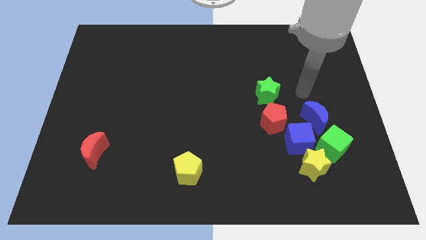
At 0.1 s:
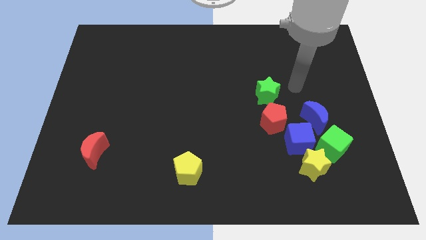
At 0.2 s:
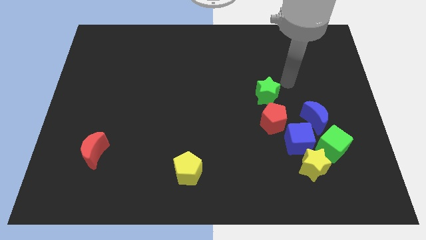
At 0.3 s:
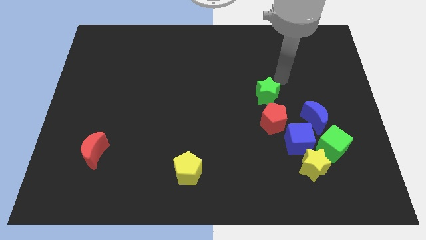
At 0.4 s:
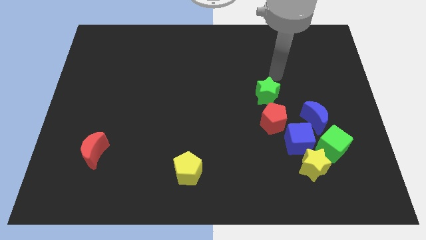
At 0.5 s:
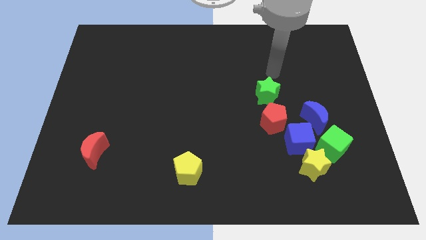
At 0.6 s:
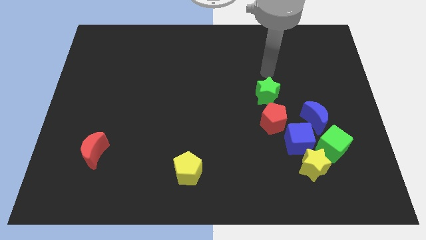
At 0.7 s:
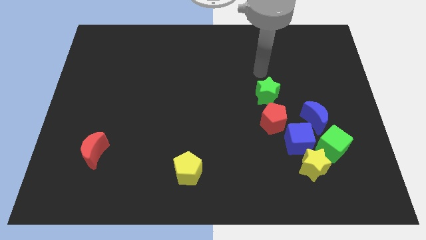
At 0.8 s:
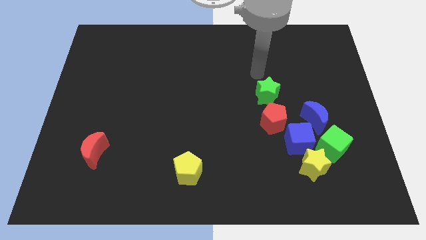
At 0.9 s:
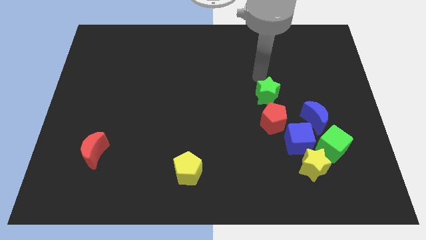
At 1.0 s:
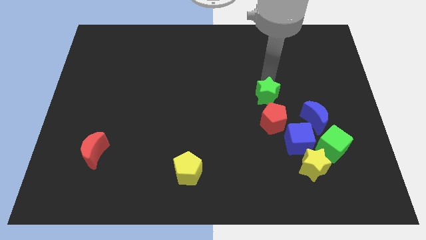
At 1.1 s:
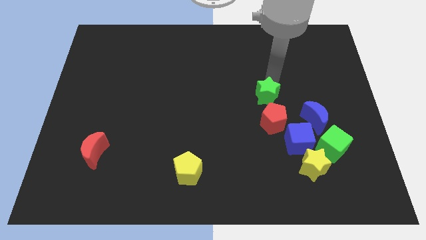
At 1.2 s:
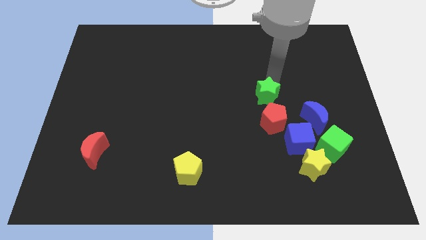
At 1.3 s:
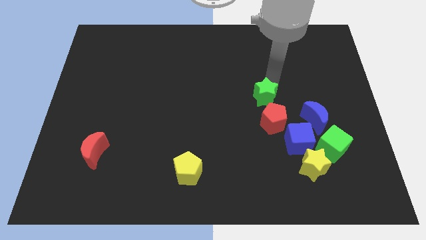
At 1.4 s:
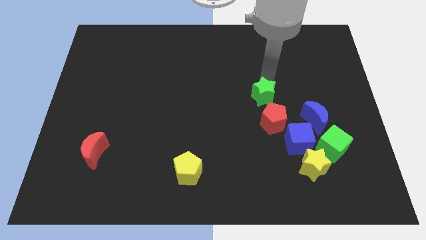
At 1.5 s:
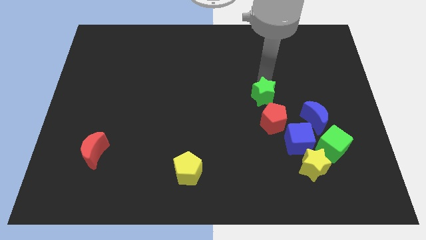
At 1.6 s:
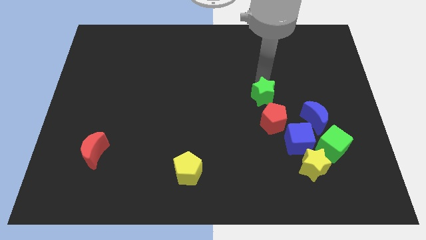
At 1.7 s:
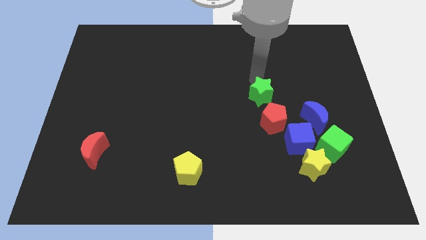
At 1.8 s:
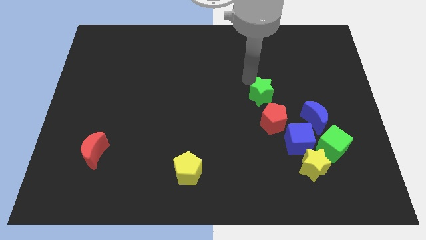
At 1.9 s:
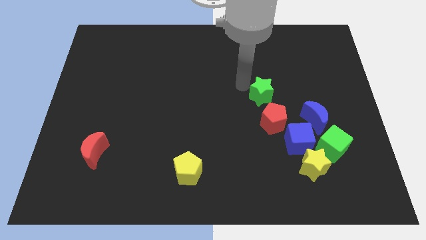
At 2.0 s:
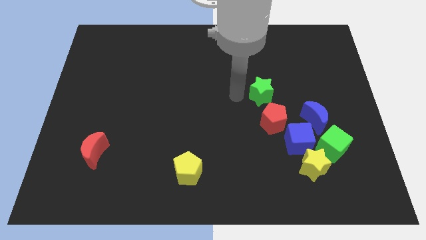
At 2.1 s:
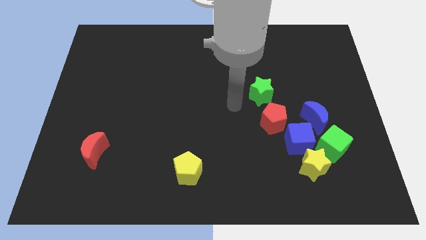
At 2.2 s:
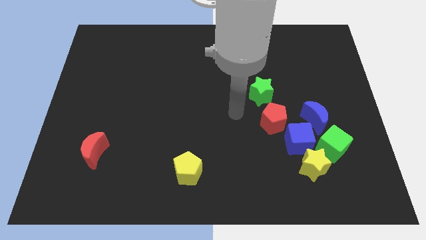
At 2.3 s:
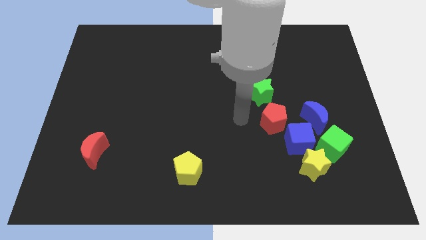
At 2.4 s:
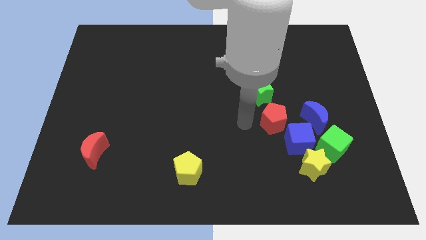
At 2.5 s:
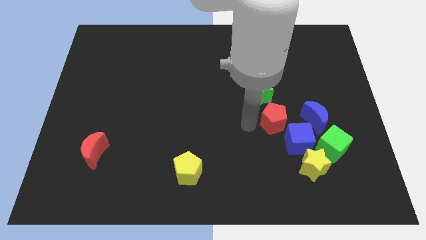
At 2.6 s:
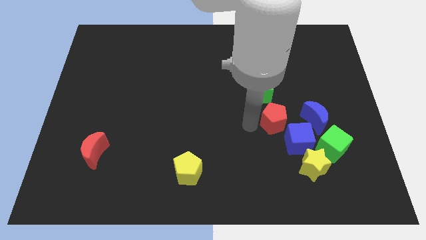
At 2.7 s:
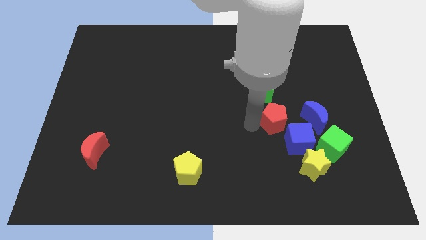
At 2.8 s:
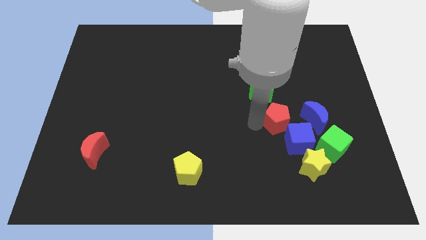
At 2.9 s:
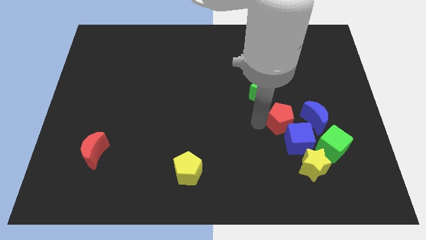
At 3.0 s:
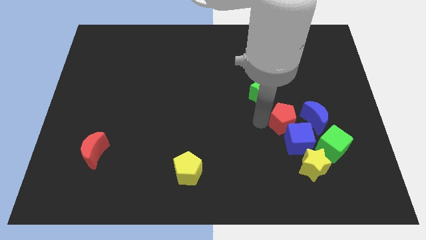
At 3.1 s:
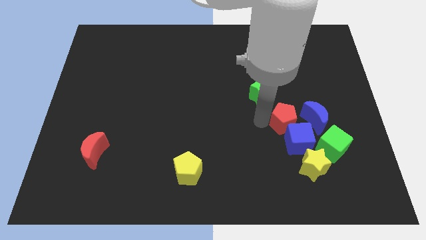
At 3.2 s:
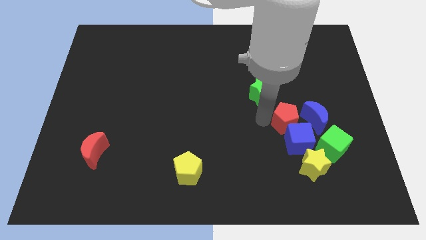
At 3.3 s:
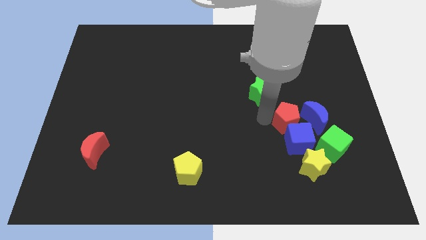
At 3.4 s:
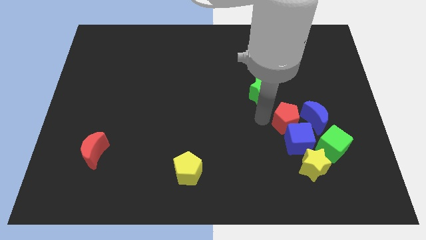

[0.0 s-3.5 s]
push the red pentagon slightly right

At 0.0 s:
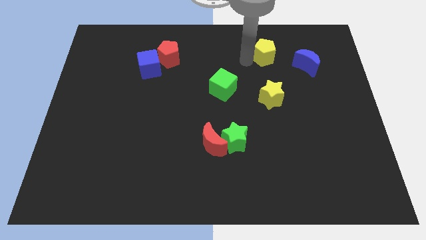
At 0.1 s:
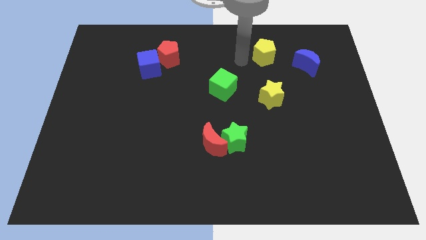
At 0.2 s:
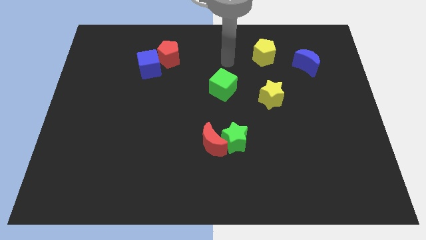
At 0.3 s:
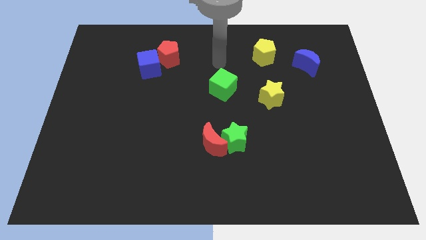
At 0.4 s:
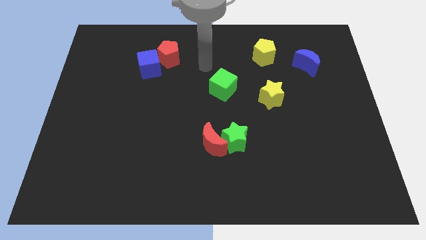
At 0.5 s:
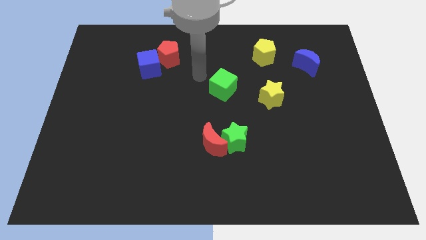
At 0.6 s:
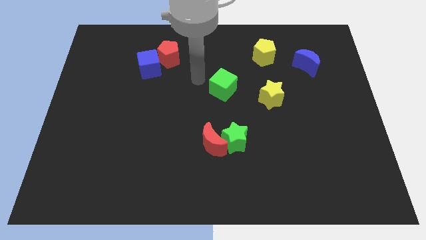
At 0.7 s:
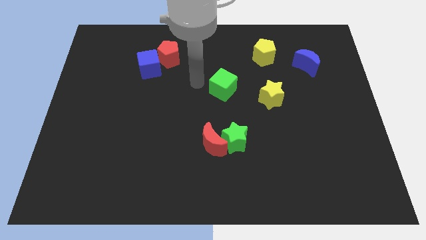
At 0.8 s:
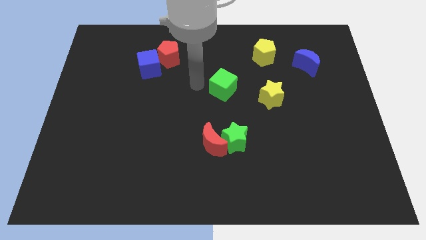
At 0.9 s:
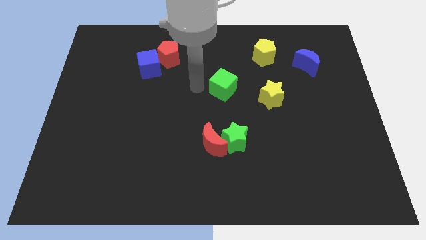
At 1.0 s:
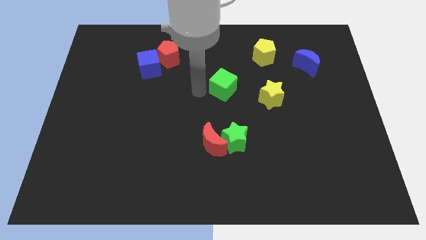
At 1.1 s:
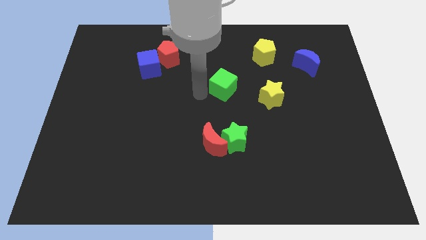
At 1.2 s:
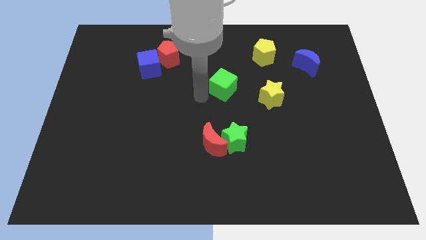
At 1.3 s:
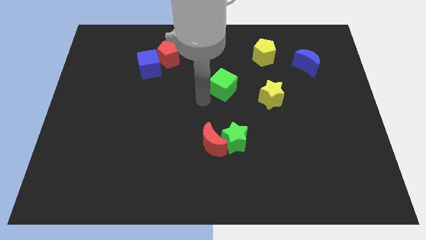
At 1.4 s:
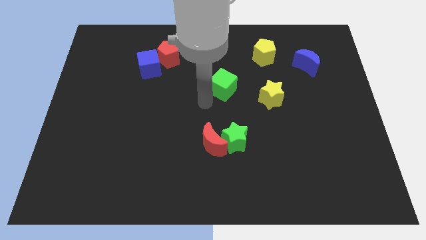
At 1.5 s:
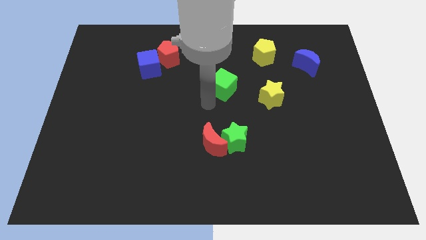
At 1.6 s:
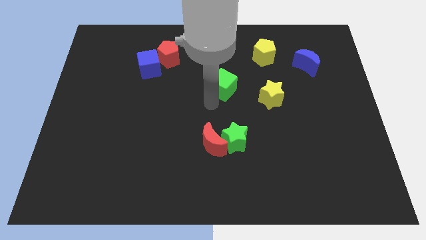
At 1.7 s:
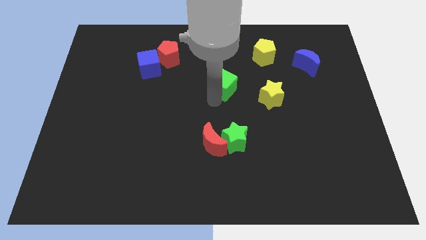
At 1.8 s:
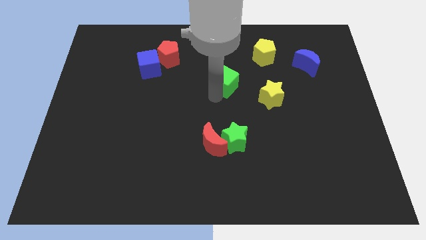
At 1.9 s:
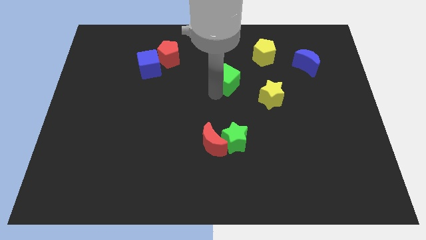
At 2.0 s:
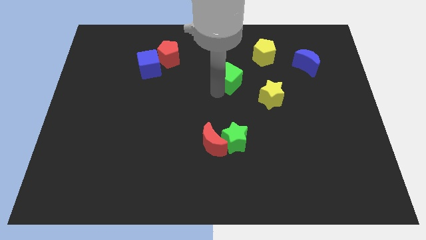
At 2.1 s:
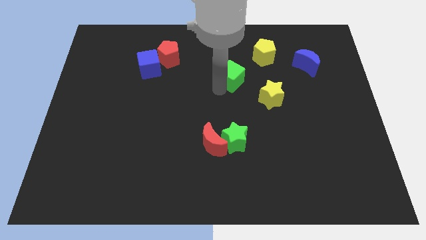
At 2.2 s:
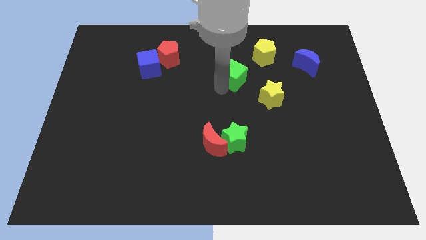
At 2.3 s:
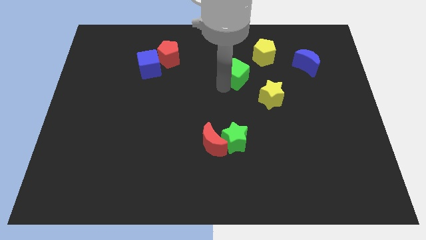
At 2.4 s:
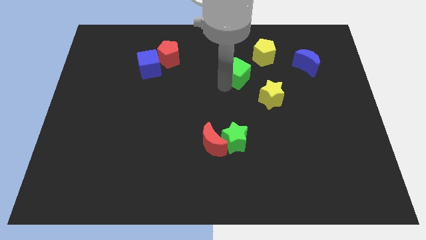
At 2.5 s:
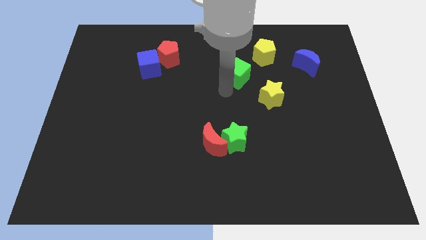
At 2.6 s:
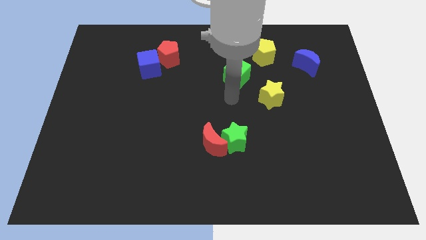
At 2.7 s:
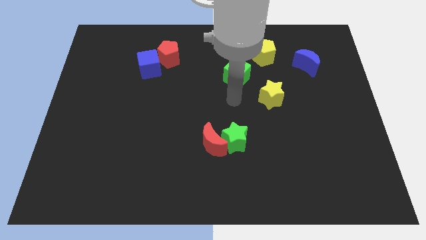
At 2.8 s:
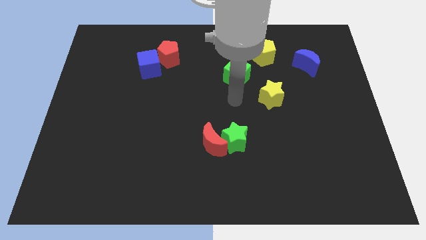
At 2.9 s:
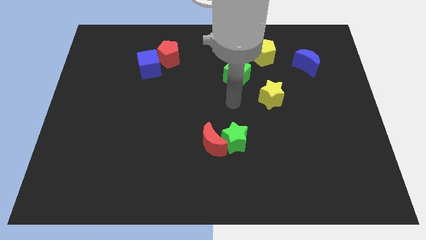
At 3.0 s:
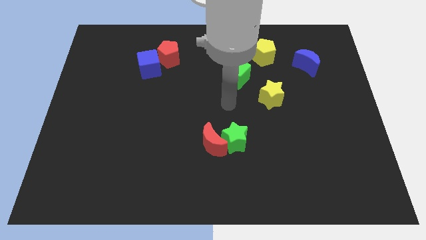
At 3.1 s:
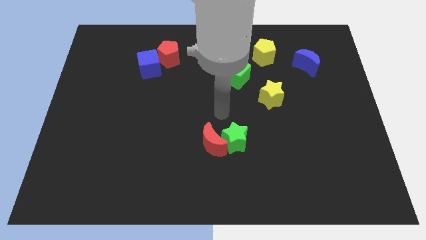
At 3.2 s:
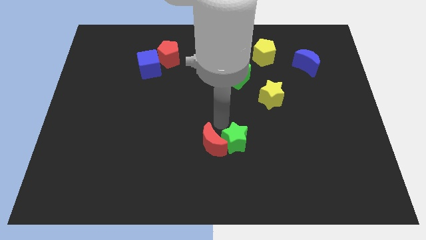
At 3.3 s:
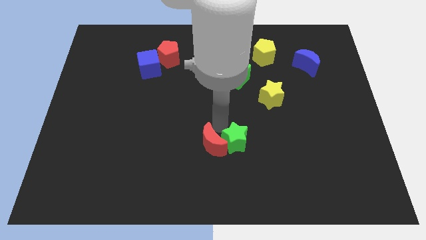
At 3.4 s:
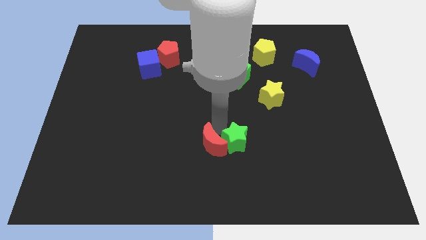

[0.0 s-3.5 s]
place the green cube closer to the yellow pentagon

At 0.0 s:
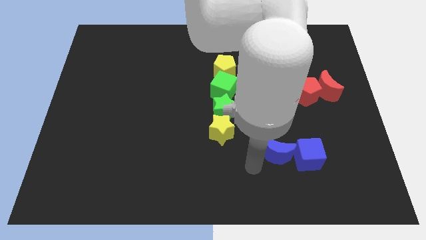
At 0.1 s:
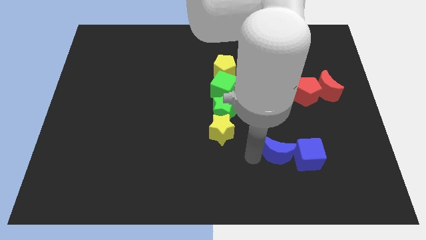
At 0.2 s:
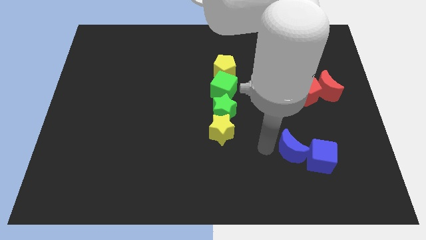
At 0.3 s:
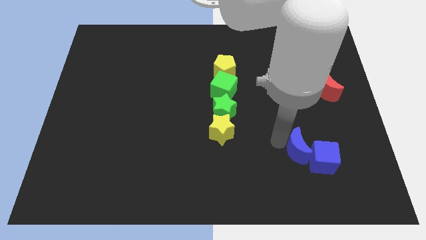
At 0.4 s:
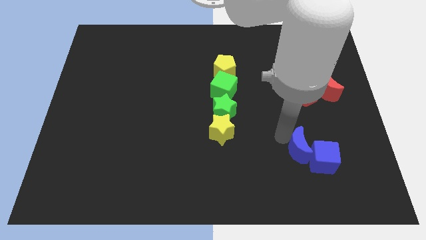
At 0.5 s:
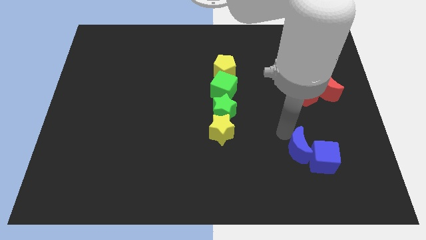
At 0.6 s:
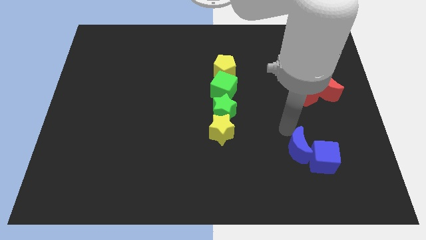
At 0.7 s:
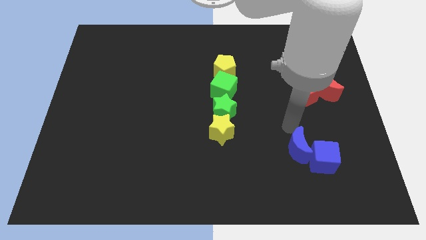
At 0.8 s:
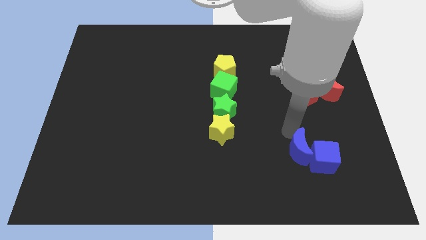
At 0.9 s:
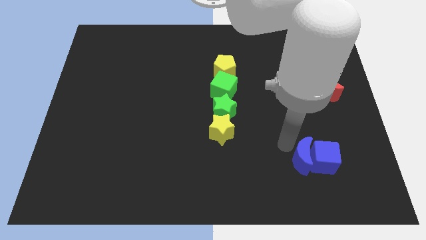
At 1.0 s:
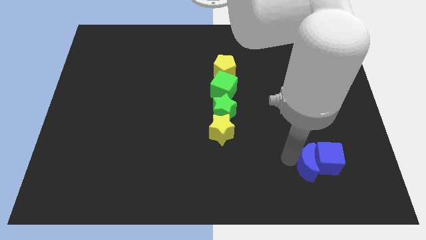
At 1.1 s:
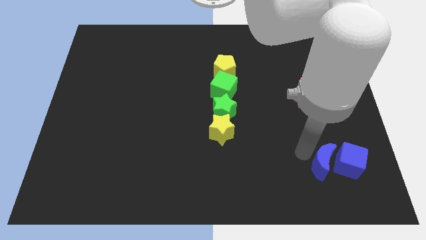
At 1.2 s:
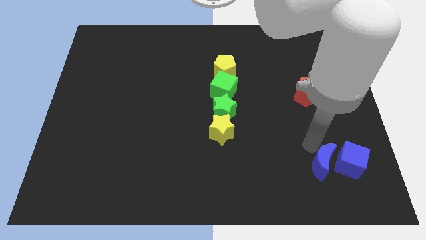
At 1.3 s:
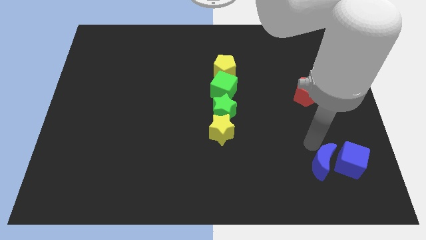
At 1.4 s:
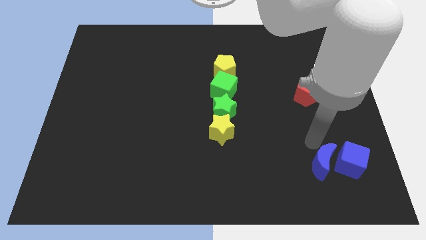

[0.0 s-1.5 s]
move the blue crescent into the blue cube

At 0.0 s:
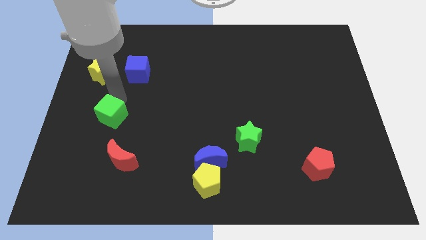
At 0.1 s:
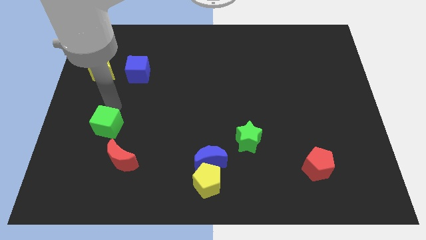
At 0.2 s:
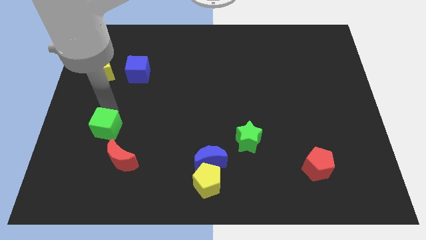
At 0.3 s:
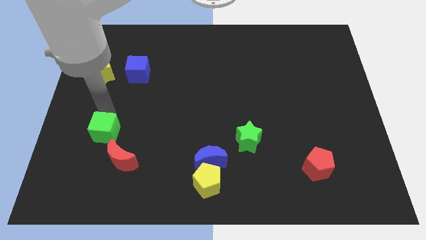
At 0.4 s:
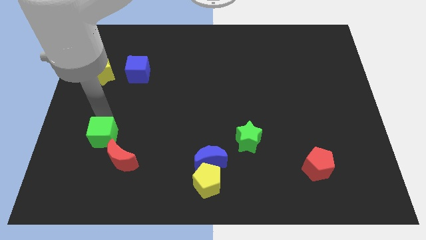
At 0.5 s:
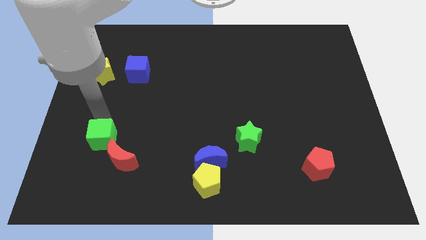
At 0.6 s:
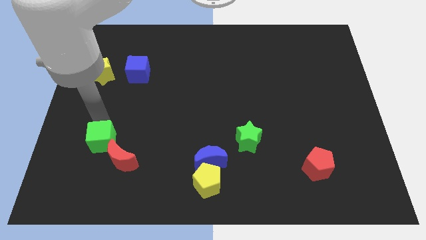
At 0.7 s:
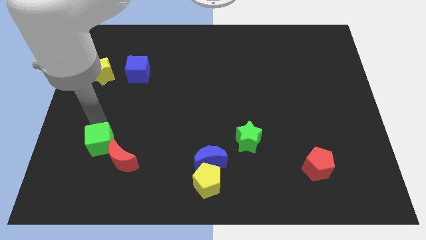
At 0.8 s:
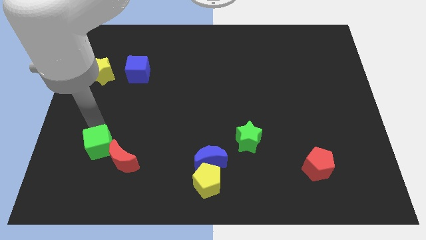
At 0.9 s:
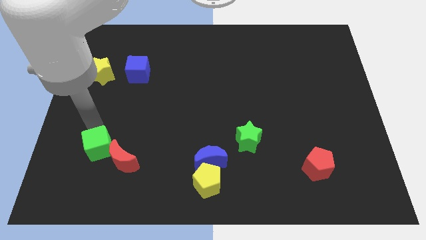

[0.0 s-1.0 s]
move the green cube near to the red moon
